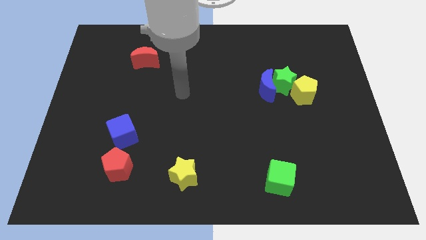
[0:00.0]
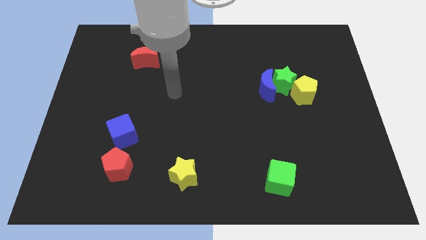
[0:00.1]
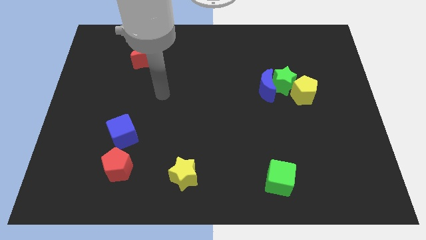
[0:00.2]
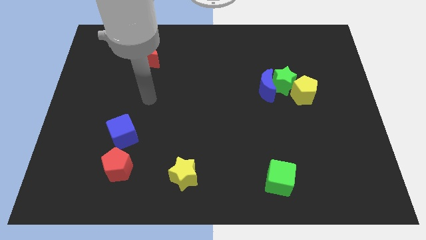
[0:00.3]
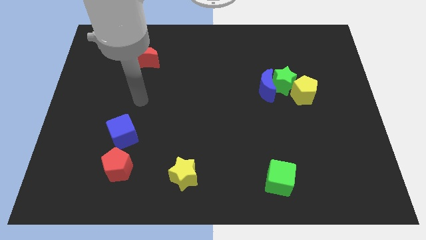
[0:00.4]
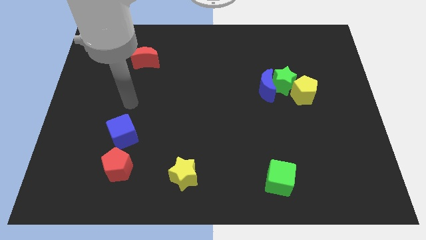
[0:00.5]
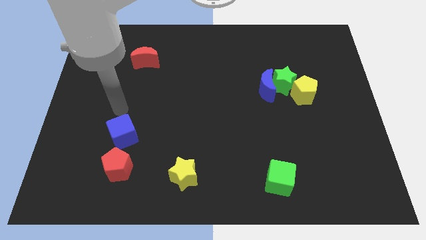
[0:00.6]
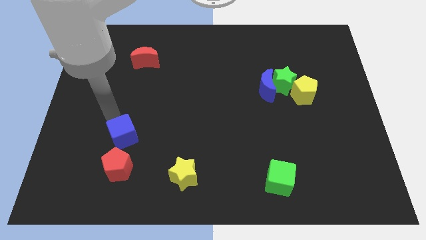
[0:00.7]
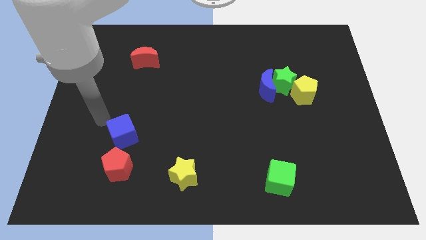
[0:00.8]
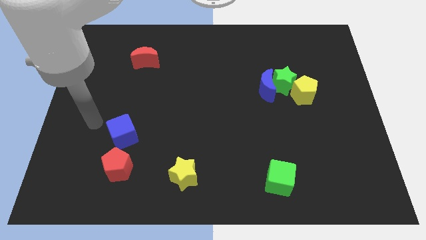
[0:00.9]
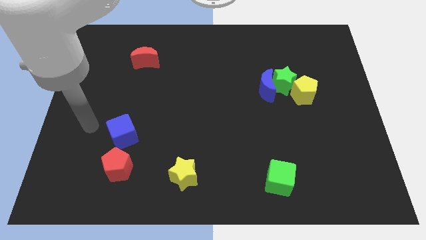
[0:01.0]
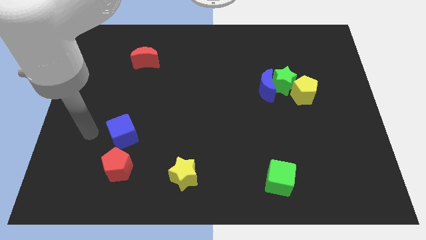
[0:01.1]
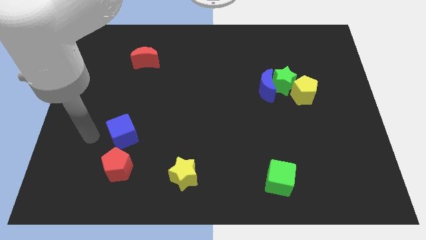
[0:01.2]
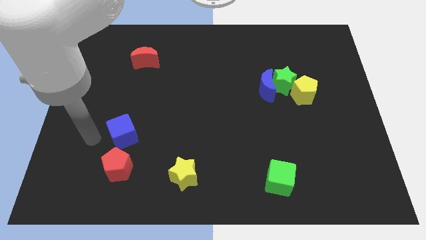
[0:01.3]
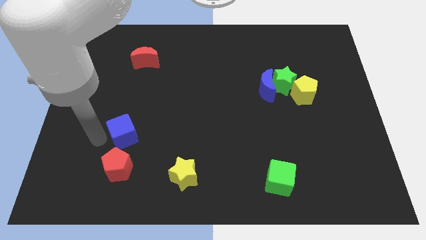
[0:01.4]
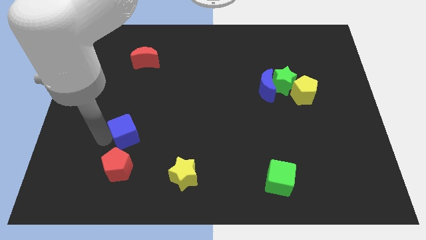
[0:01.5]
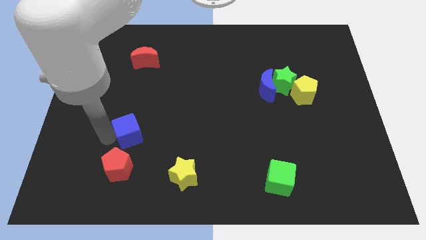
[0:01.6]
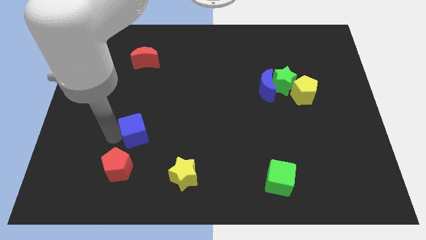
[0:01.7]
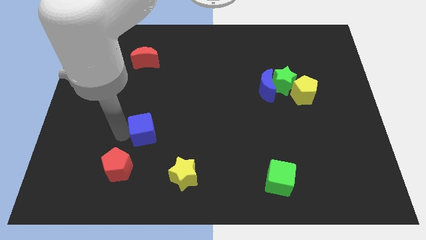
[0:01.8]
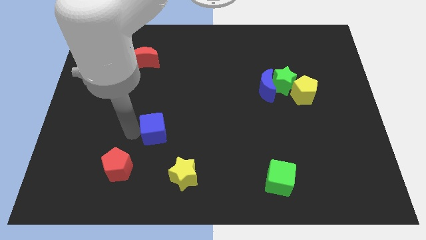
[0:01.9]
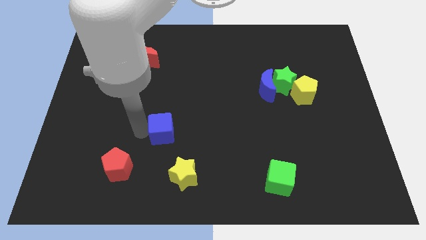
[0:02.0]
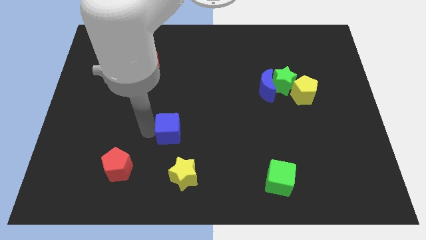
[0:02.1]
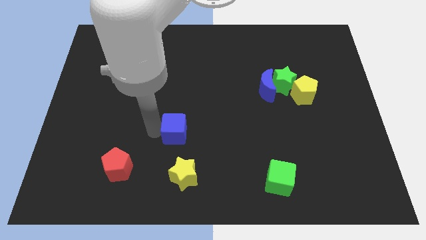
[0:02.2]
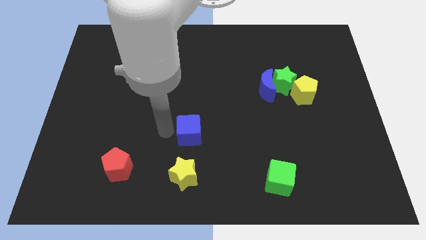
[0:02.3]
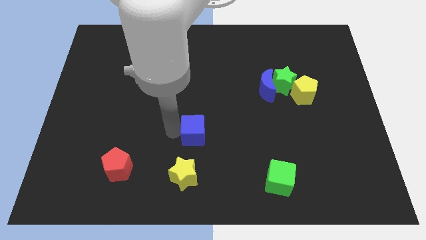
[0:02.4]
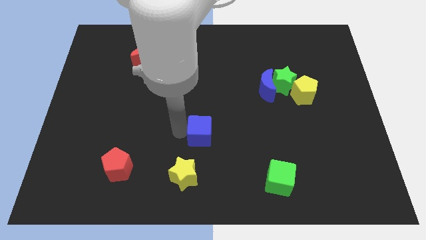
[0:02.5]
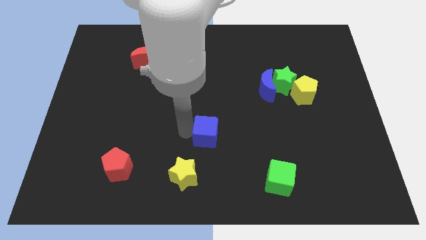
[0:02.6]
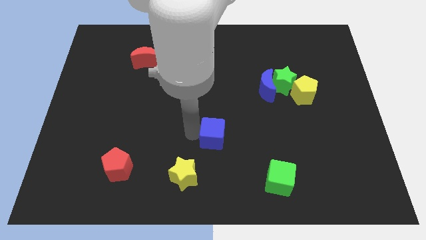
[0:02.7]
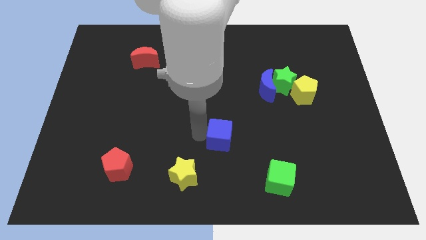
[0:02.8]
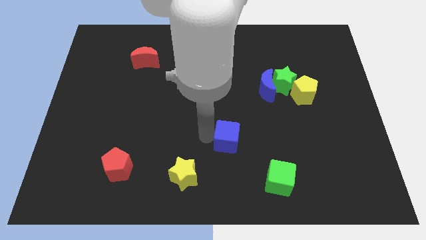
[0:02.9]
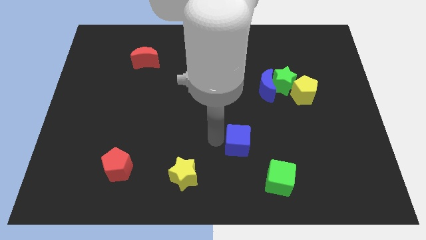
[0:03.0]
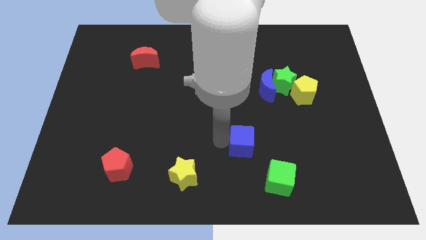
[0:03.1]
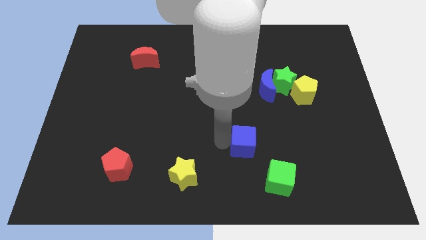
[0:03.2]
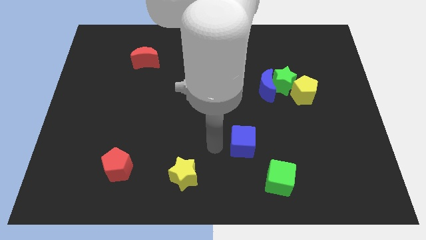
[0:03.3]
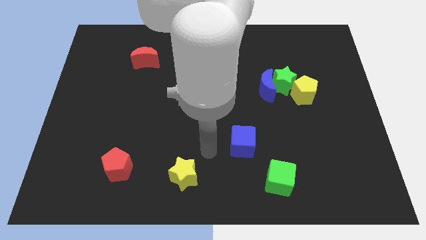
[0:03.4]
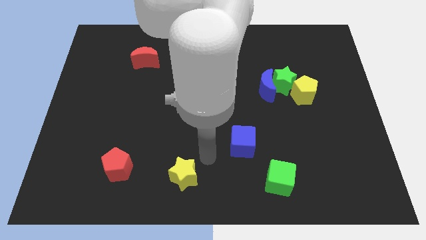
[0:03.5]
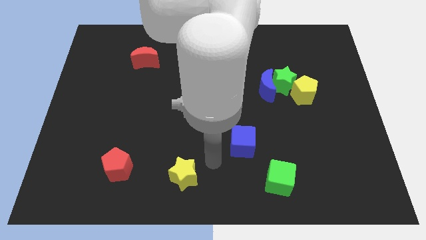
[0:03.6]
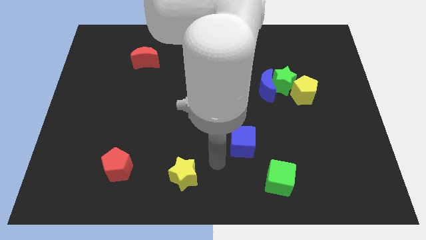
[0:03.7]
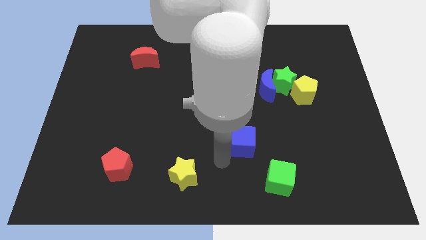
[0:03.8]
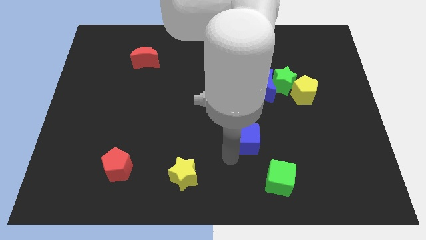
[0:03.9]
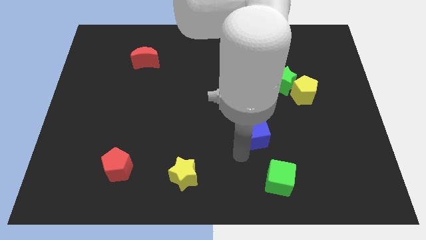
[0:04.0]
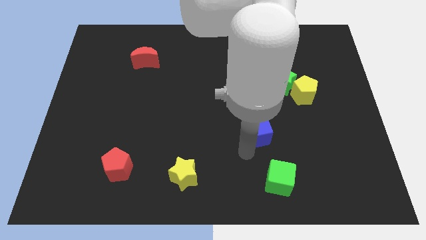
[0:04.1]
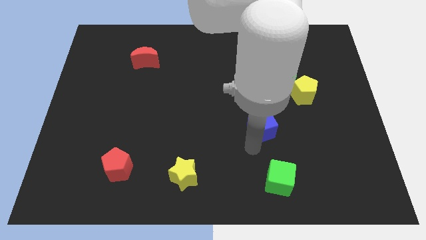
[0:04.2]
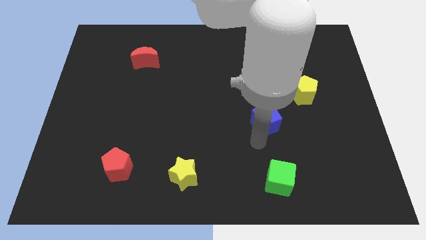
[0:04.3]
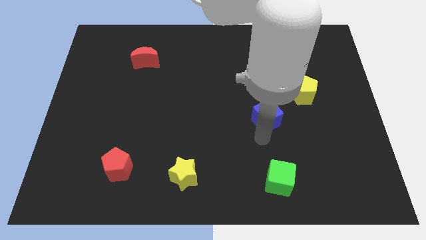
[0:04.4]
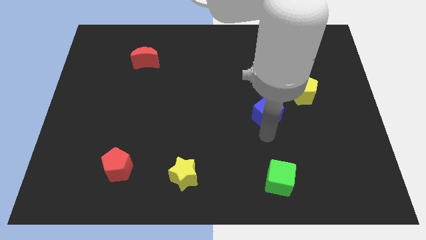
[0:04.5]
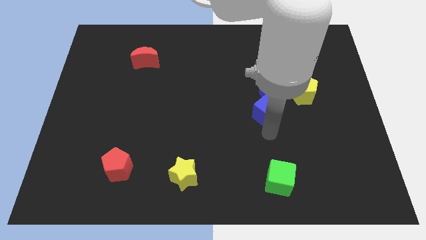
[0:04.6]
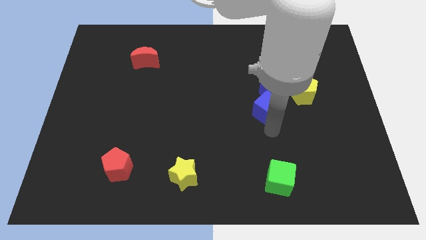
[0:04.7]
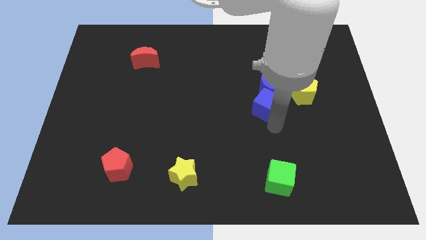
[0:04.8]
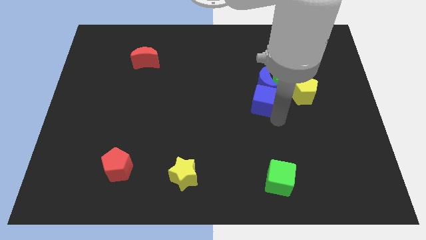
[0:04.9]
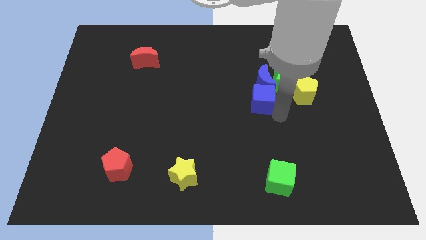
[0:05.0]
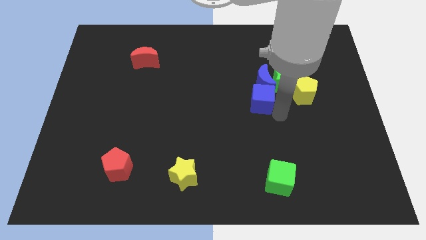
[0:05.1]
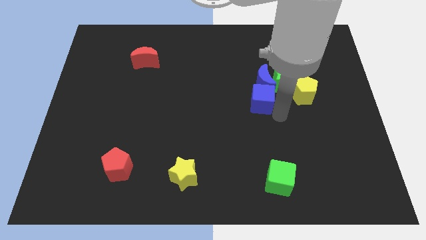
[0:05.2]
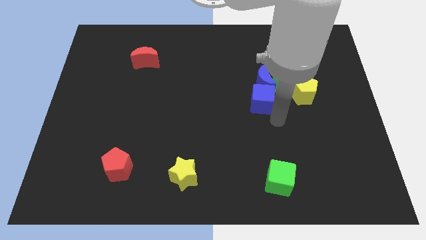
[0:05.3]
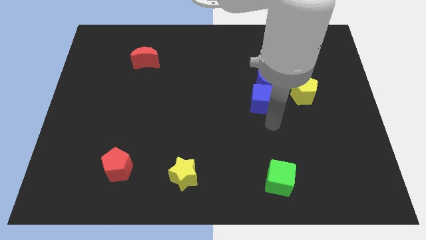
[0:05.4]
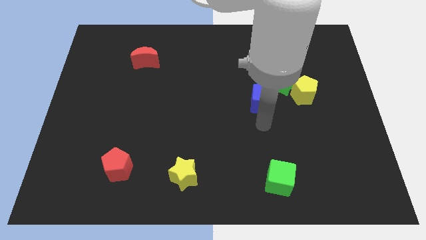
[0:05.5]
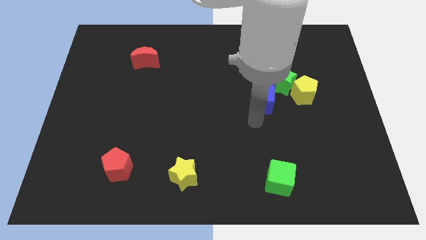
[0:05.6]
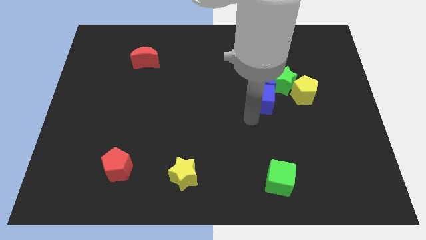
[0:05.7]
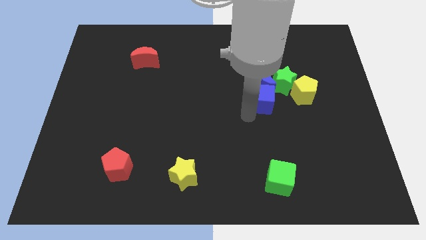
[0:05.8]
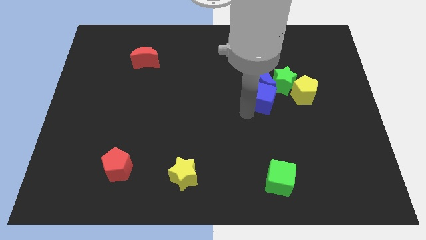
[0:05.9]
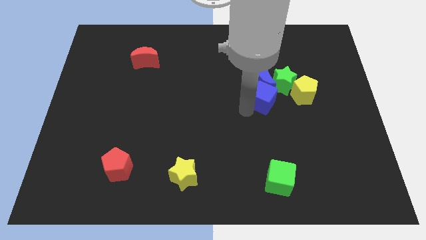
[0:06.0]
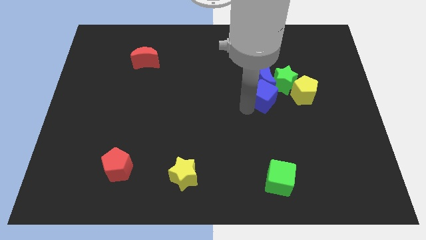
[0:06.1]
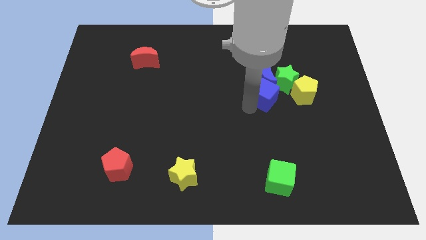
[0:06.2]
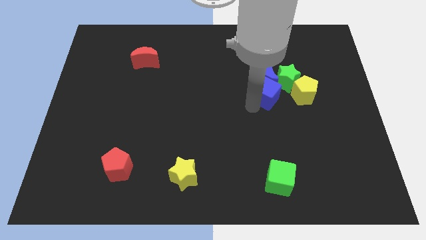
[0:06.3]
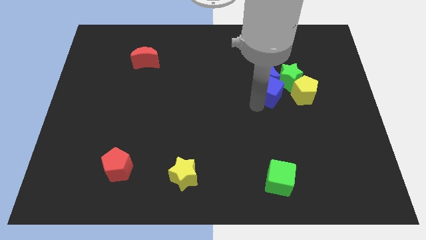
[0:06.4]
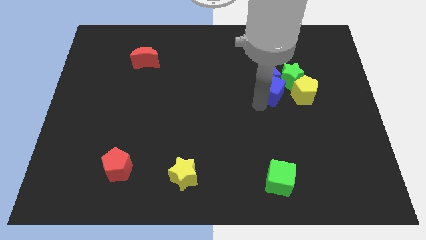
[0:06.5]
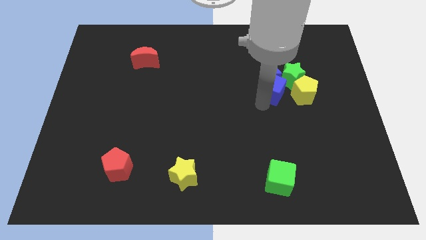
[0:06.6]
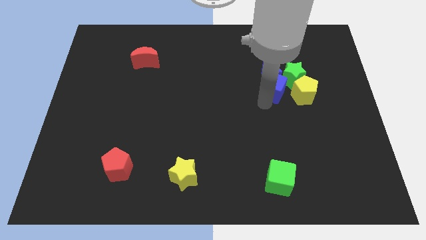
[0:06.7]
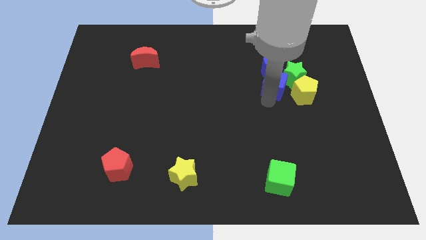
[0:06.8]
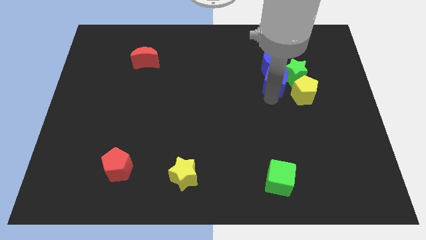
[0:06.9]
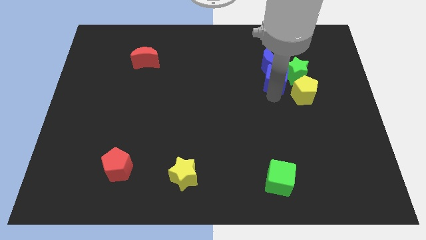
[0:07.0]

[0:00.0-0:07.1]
slide the blue cube to the green star

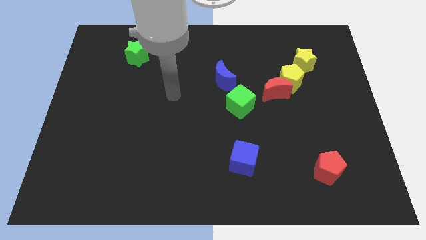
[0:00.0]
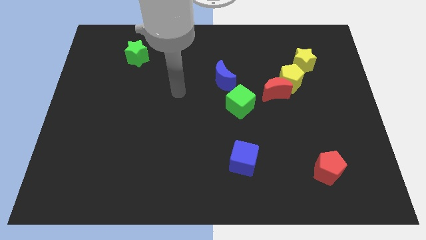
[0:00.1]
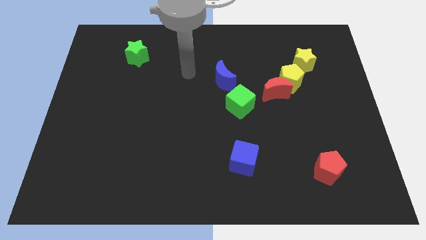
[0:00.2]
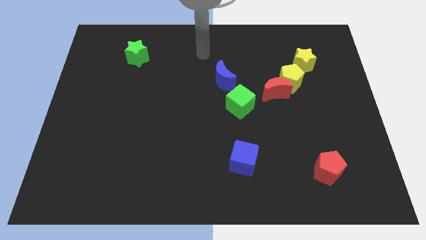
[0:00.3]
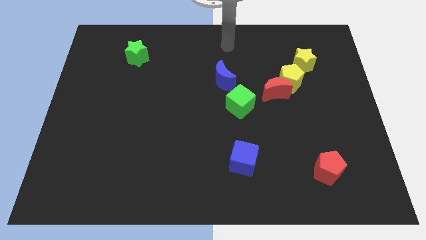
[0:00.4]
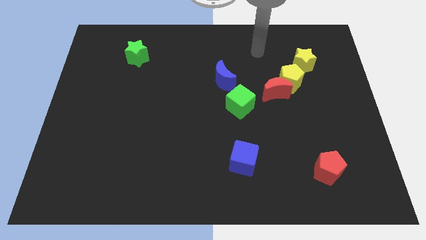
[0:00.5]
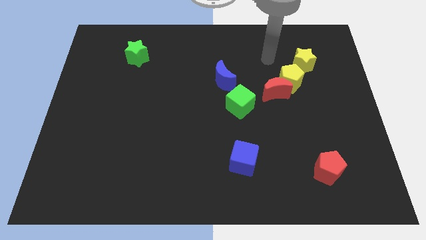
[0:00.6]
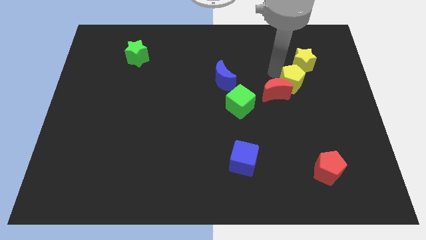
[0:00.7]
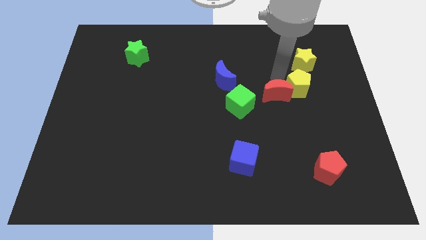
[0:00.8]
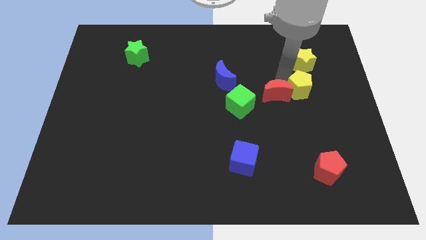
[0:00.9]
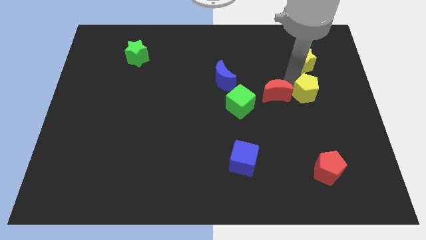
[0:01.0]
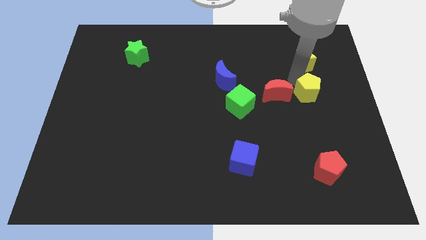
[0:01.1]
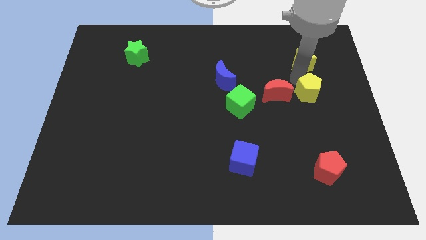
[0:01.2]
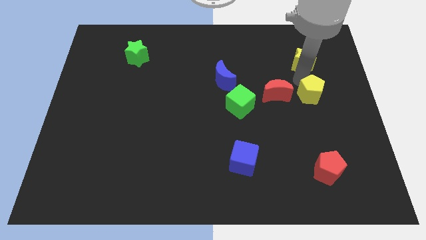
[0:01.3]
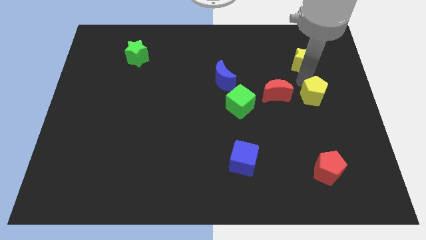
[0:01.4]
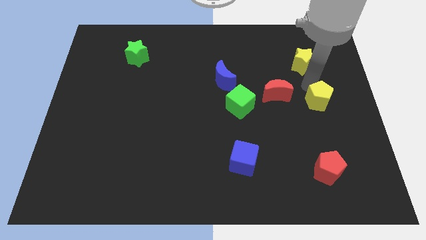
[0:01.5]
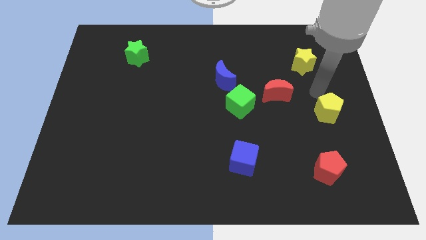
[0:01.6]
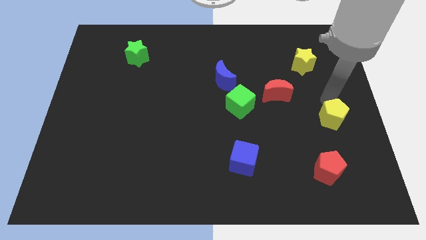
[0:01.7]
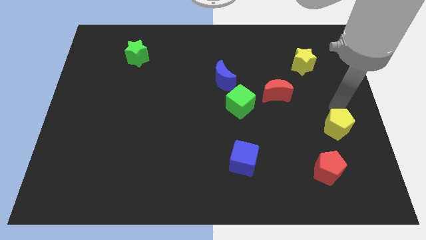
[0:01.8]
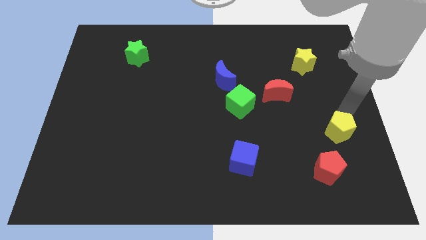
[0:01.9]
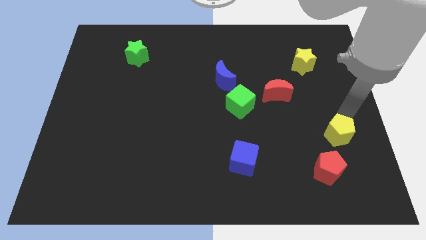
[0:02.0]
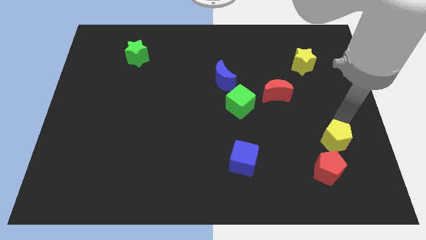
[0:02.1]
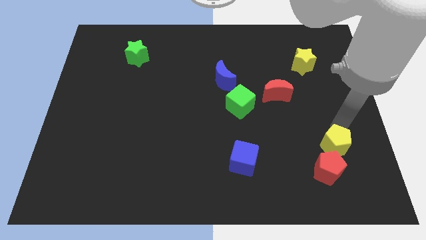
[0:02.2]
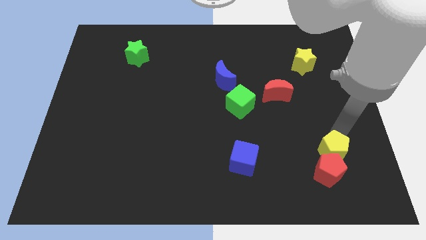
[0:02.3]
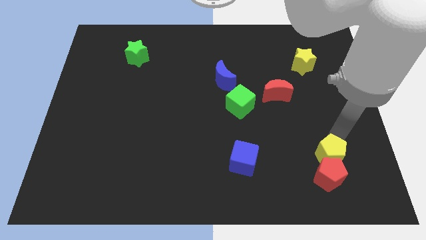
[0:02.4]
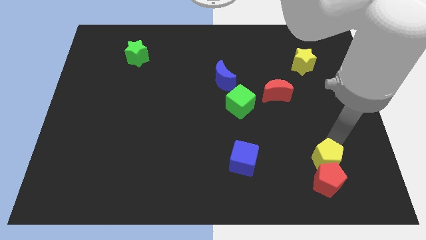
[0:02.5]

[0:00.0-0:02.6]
put the yellow pentagon next to the red pentagon
